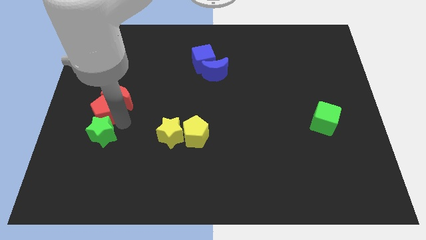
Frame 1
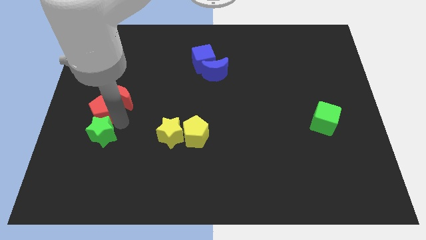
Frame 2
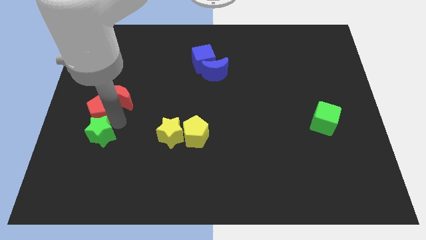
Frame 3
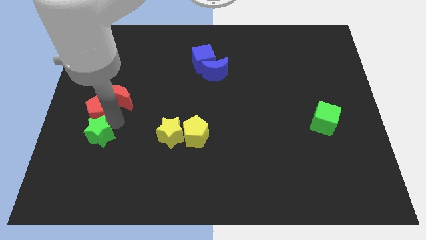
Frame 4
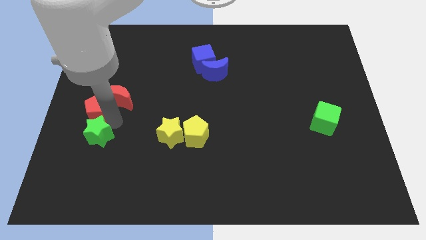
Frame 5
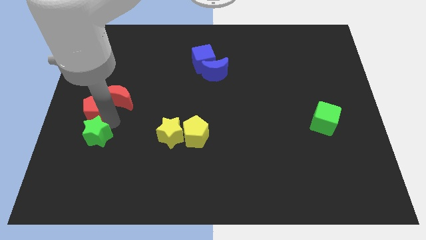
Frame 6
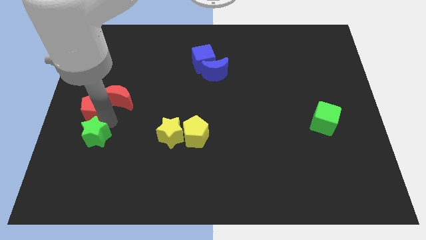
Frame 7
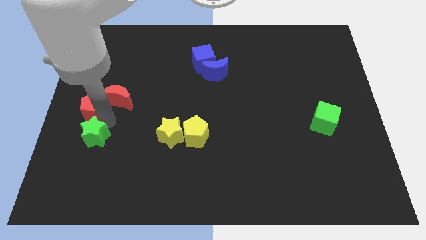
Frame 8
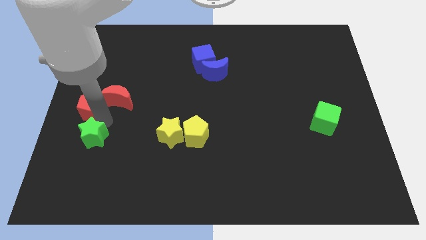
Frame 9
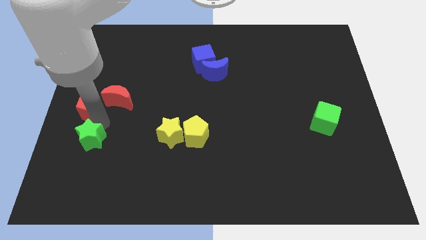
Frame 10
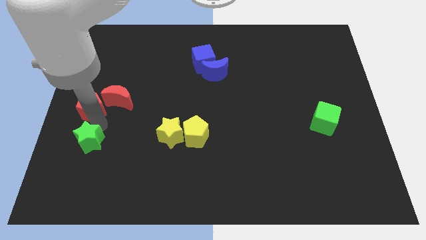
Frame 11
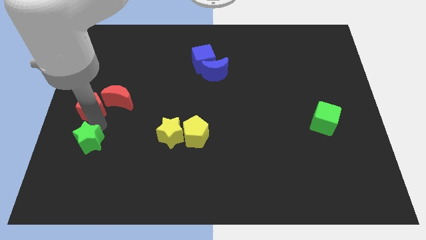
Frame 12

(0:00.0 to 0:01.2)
separate the green star and red pentagon from each other

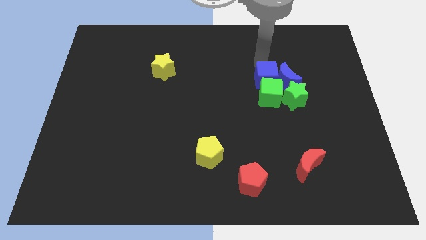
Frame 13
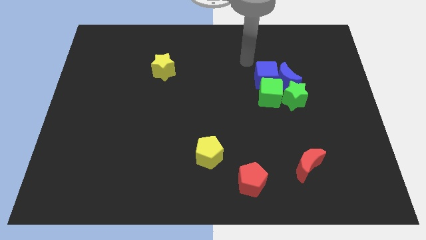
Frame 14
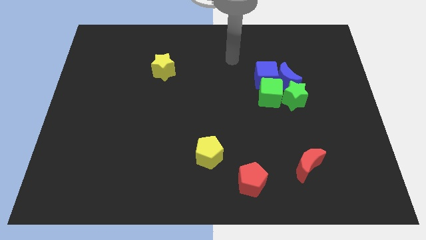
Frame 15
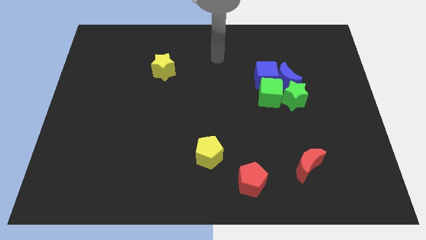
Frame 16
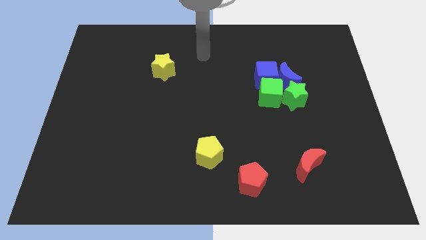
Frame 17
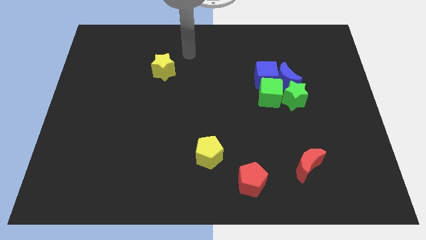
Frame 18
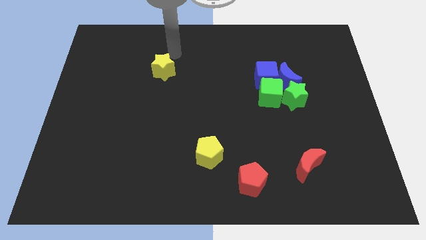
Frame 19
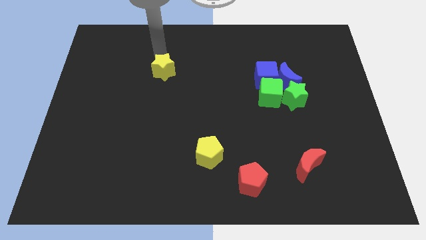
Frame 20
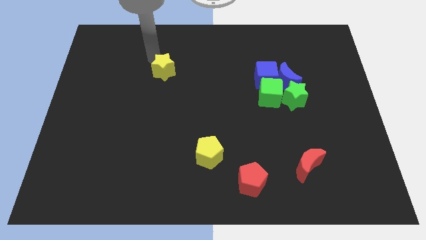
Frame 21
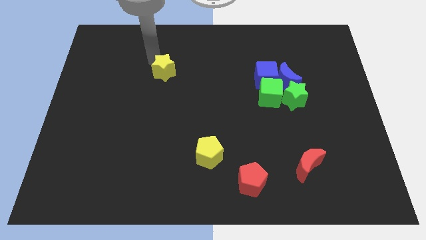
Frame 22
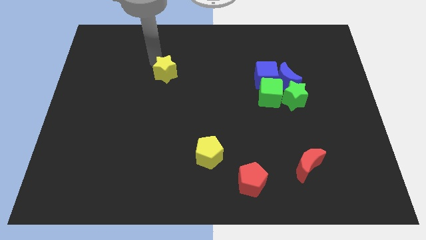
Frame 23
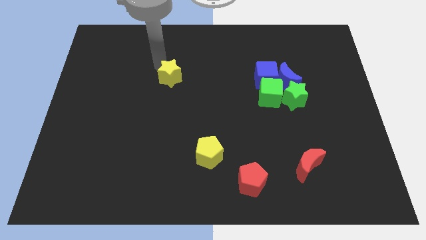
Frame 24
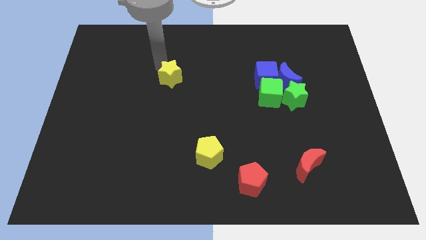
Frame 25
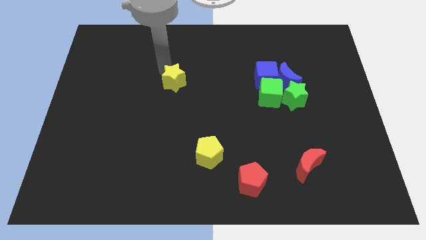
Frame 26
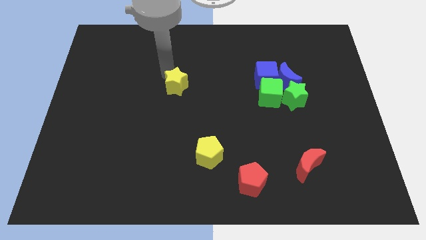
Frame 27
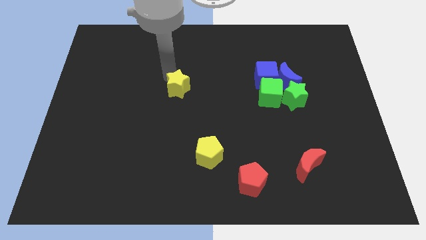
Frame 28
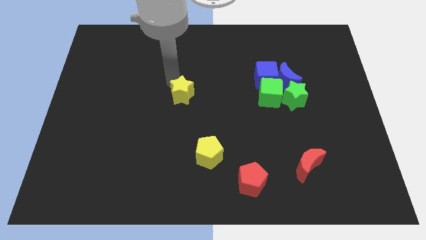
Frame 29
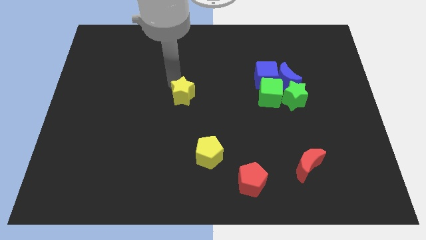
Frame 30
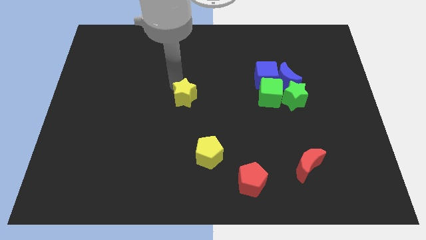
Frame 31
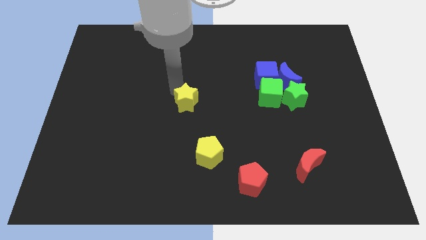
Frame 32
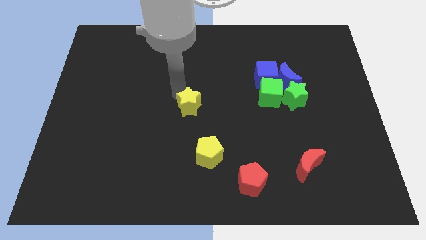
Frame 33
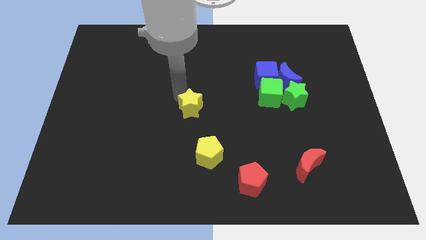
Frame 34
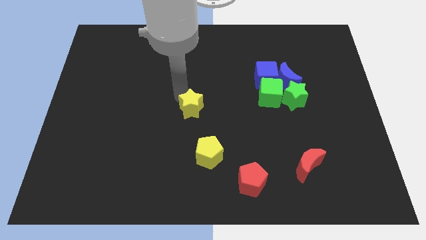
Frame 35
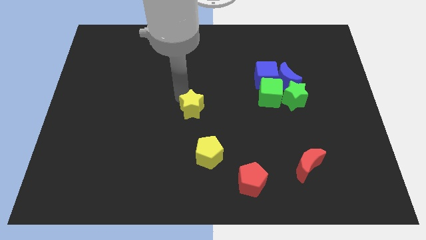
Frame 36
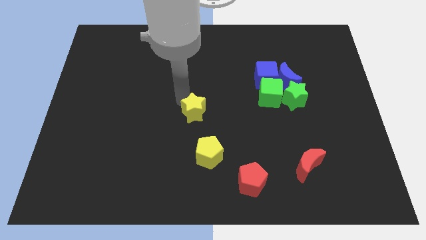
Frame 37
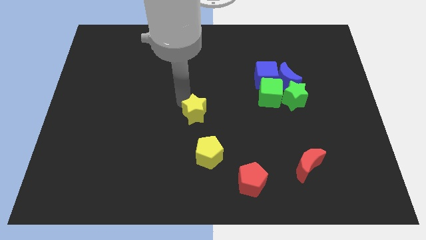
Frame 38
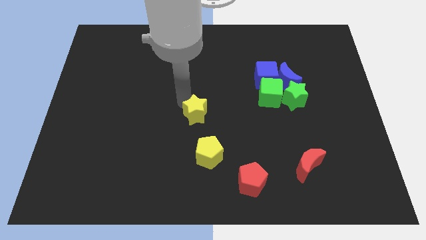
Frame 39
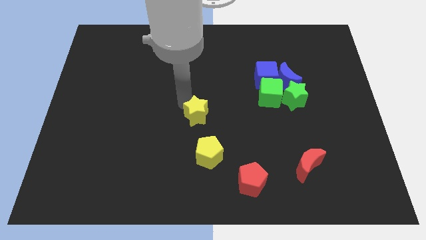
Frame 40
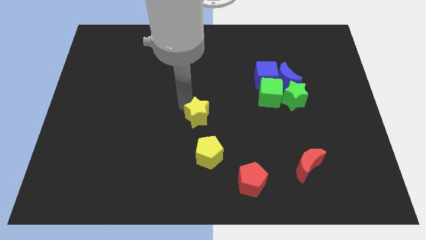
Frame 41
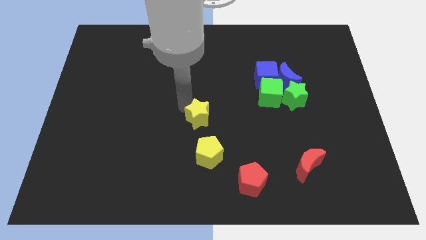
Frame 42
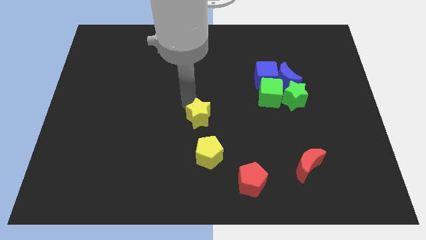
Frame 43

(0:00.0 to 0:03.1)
place yellow star at the center

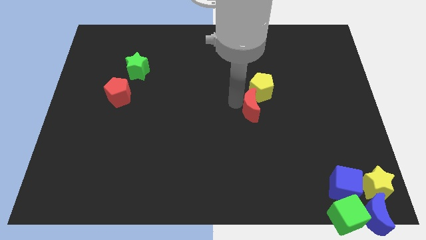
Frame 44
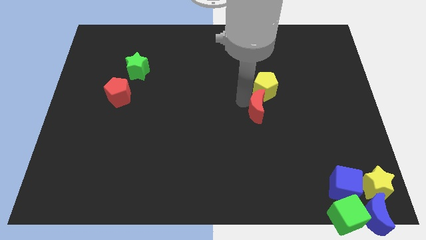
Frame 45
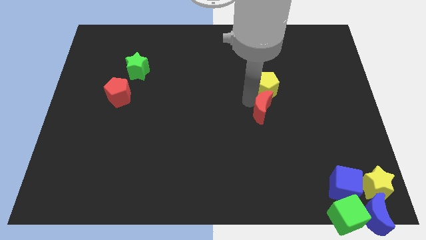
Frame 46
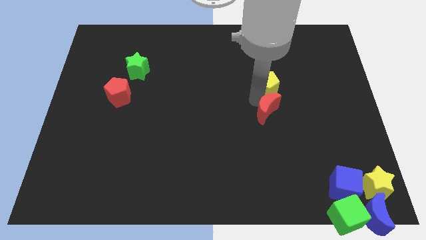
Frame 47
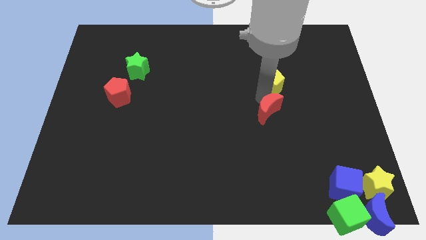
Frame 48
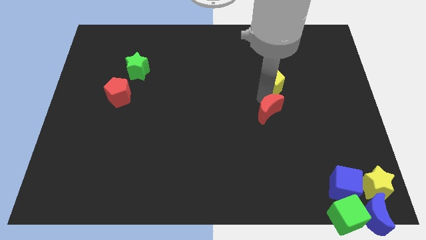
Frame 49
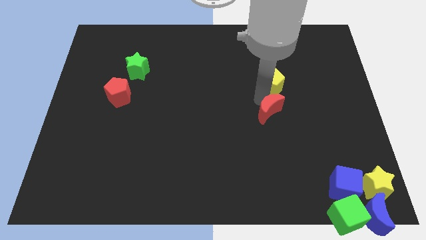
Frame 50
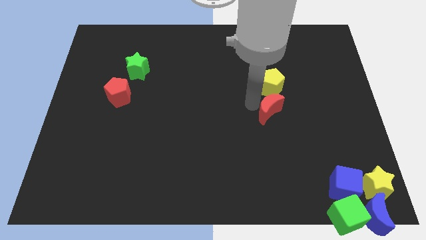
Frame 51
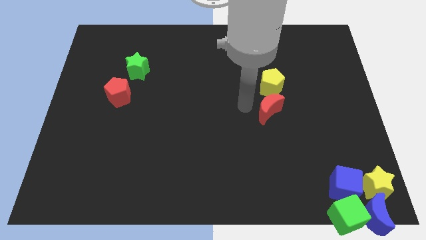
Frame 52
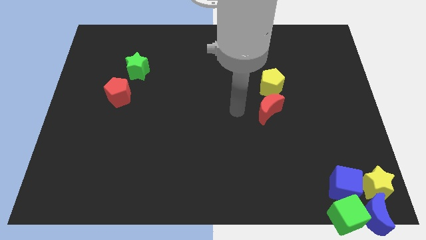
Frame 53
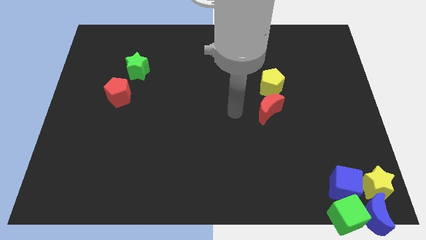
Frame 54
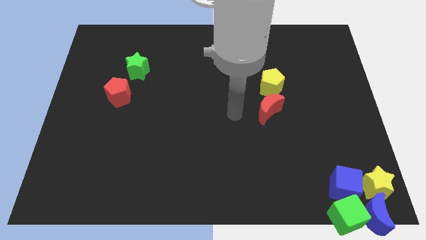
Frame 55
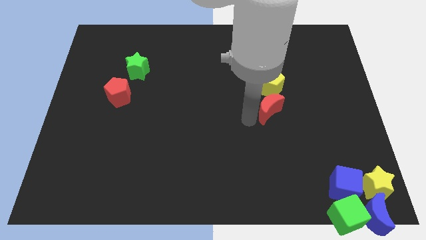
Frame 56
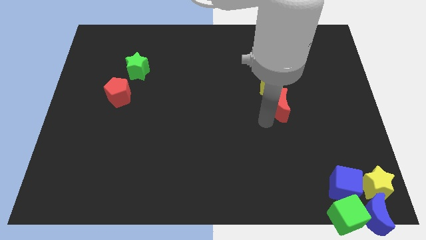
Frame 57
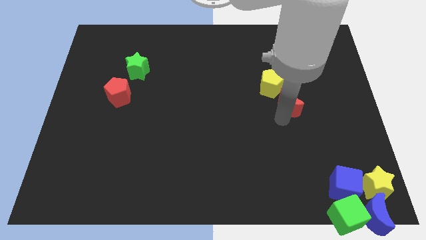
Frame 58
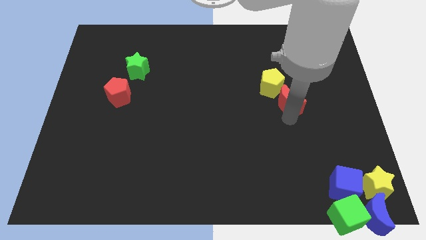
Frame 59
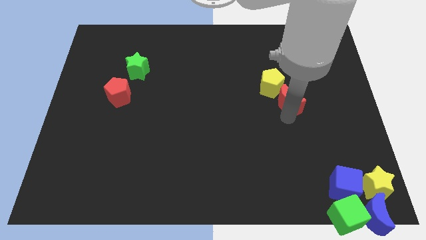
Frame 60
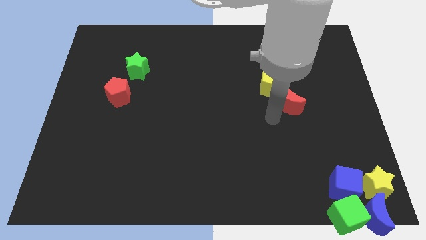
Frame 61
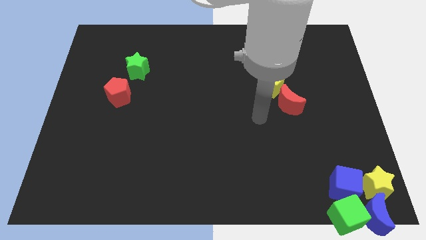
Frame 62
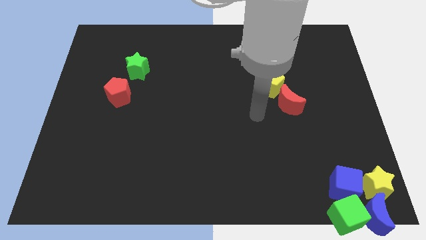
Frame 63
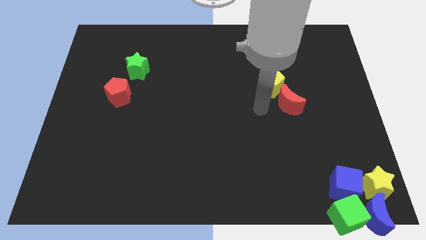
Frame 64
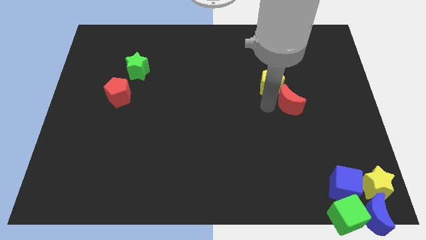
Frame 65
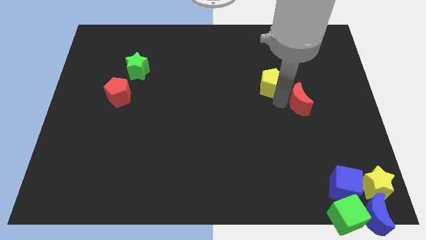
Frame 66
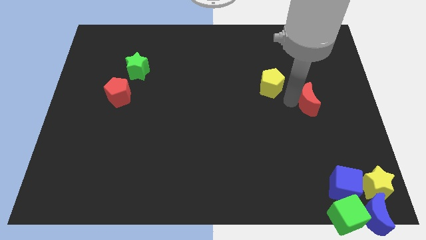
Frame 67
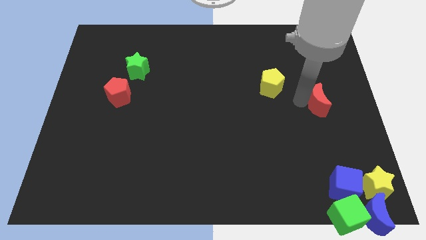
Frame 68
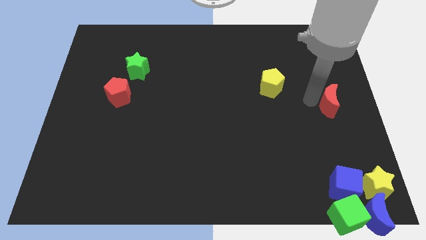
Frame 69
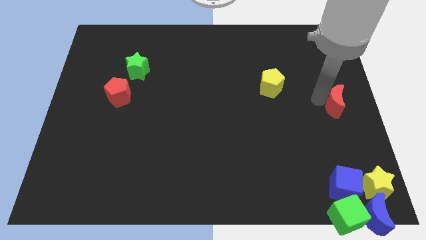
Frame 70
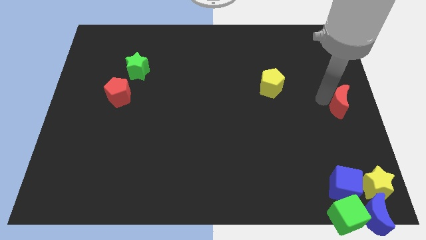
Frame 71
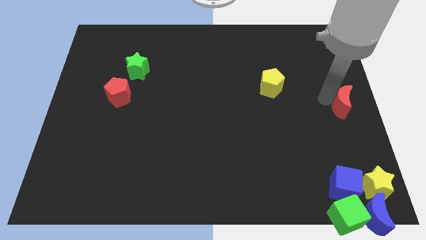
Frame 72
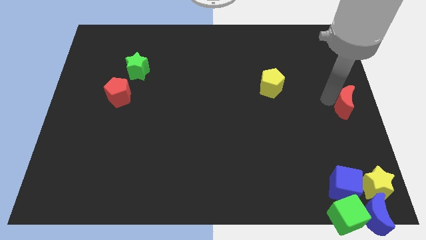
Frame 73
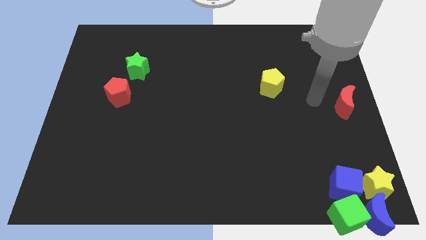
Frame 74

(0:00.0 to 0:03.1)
move the red crescent towards the center right of the board

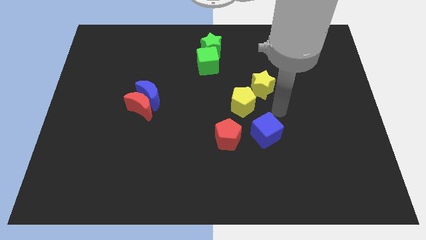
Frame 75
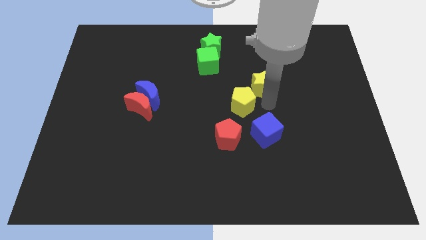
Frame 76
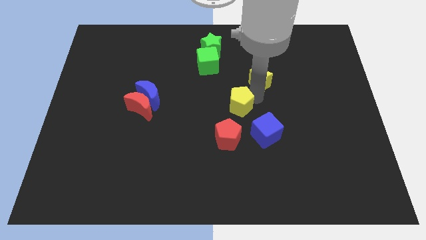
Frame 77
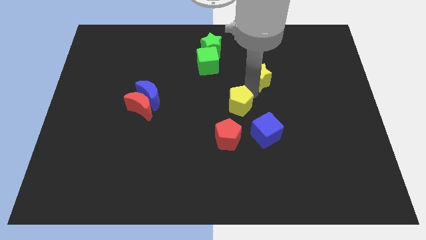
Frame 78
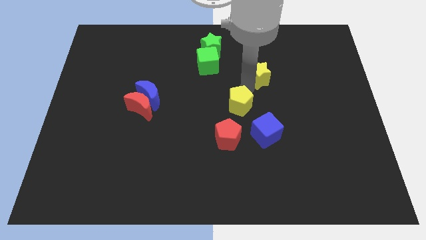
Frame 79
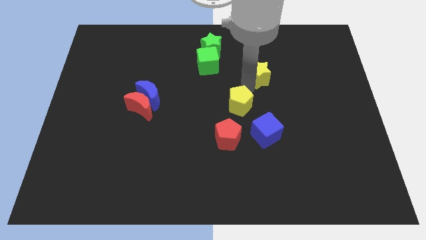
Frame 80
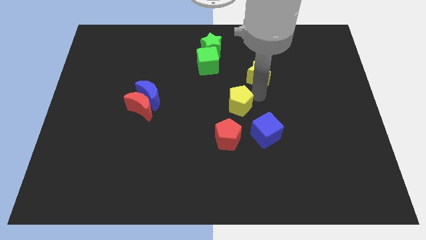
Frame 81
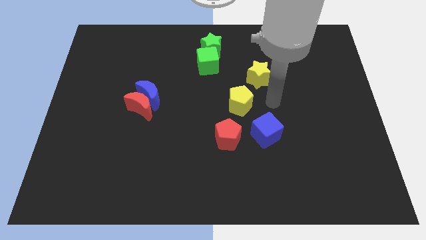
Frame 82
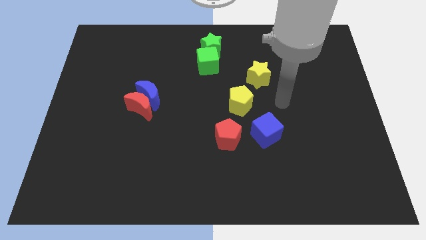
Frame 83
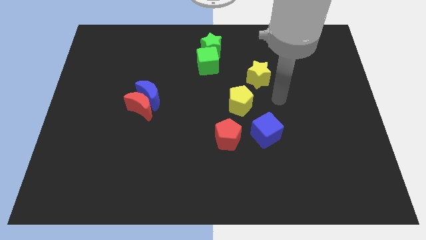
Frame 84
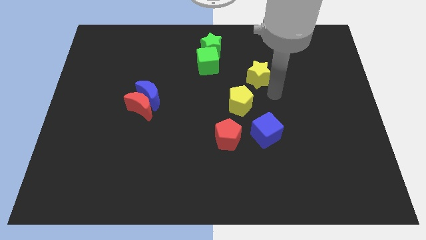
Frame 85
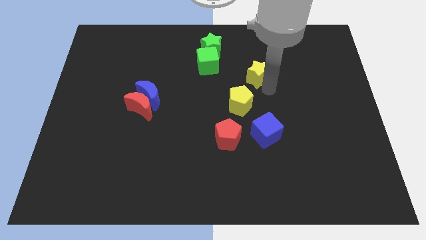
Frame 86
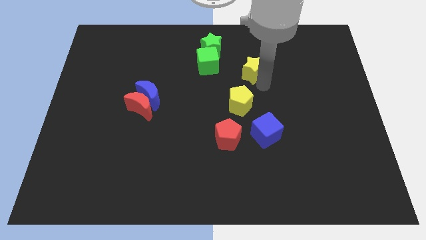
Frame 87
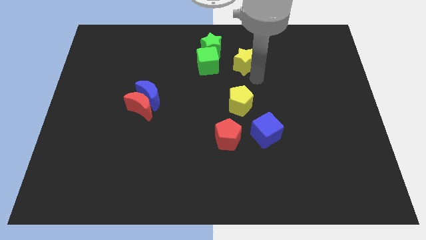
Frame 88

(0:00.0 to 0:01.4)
place yellow star right to the green cube
